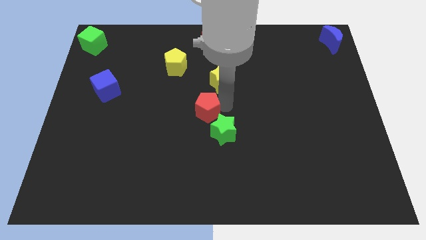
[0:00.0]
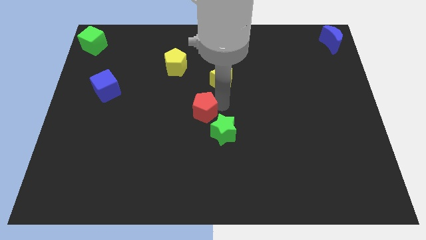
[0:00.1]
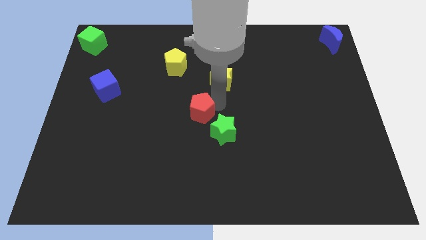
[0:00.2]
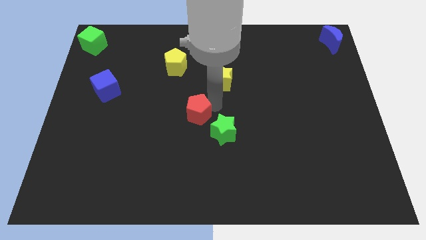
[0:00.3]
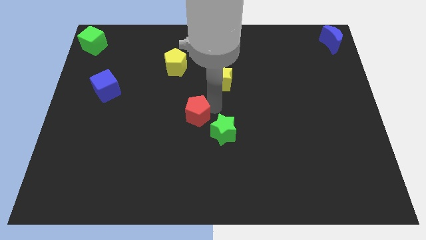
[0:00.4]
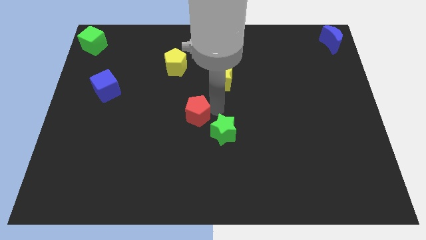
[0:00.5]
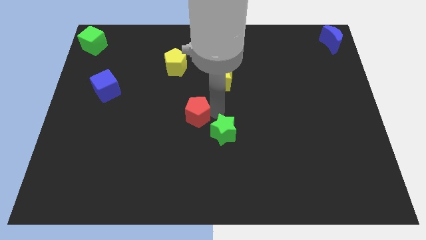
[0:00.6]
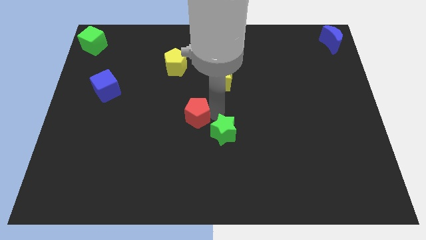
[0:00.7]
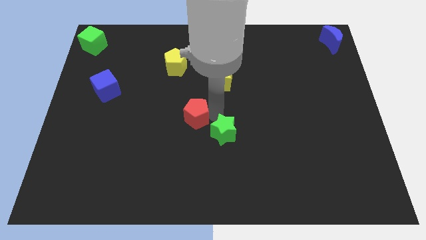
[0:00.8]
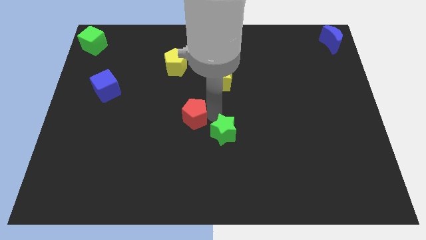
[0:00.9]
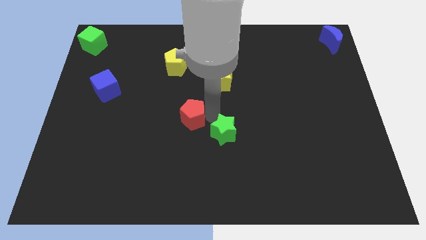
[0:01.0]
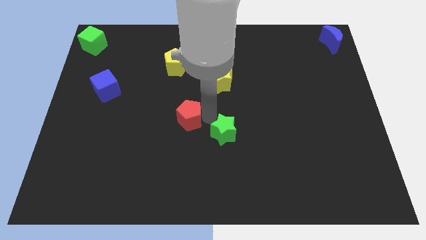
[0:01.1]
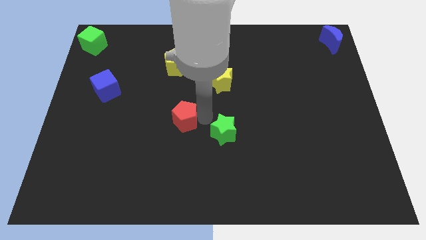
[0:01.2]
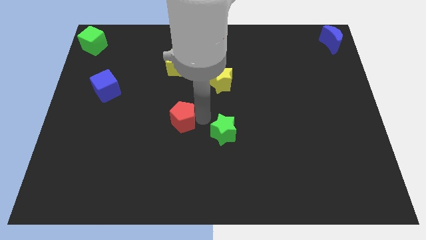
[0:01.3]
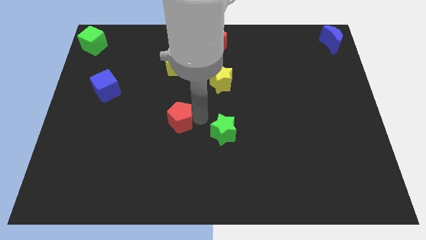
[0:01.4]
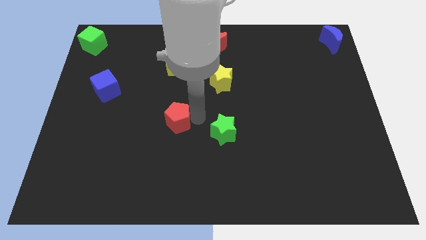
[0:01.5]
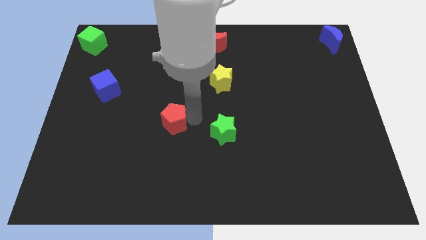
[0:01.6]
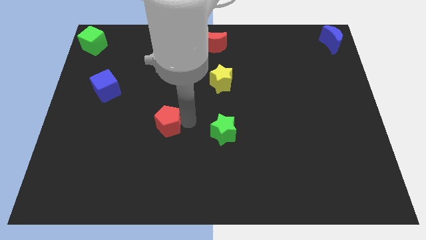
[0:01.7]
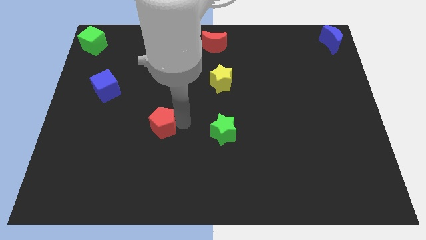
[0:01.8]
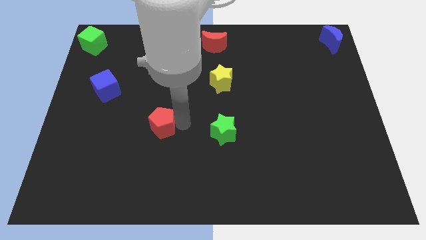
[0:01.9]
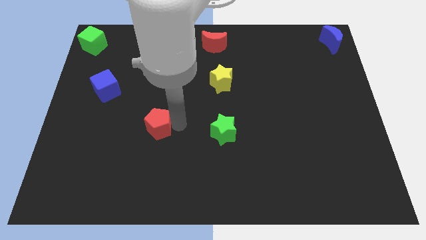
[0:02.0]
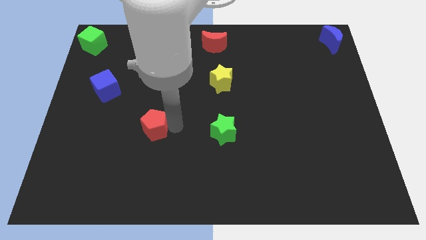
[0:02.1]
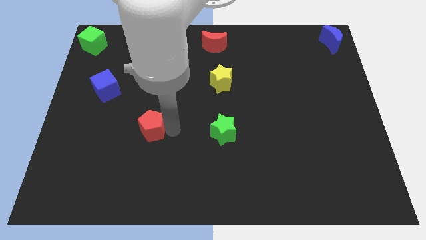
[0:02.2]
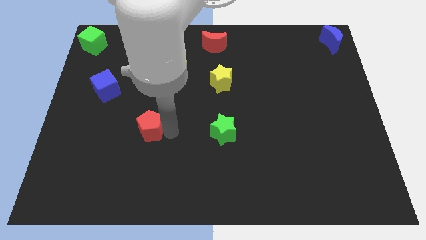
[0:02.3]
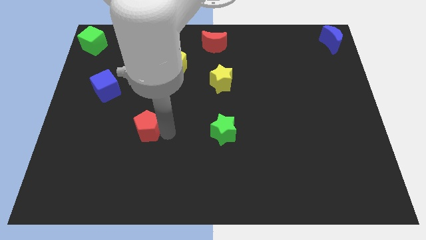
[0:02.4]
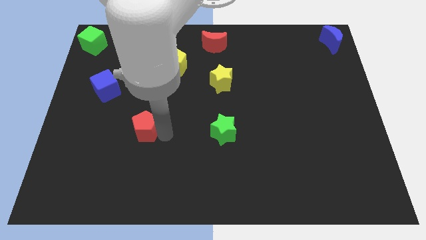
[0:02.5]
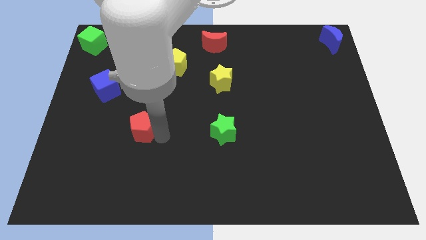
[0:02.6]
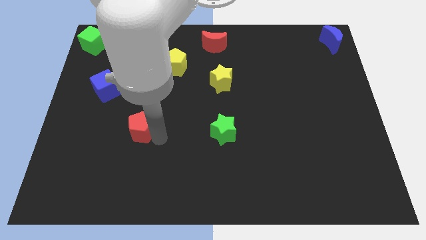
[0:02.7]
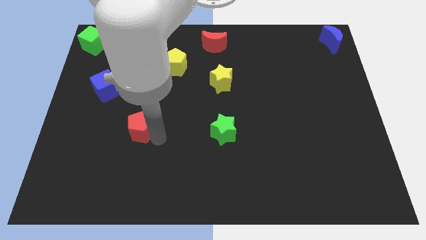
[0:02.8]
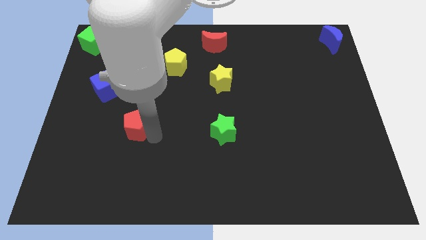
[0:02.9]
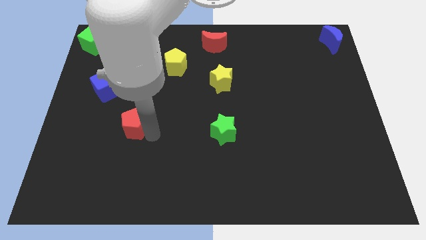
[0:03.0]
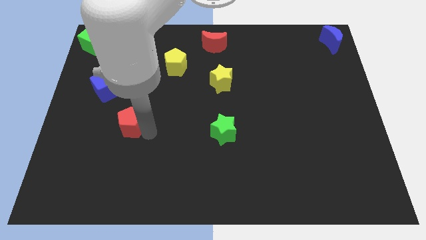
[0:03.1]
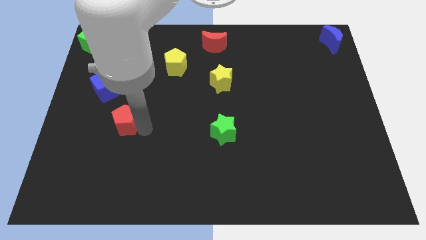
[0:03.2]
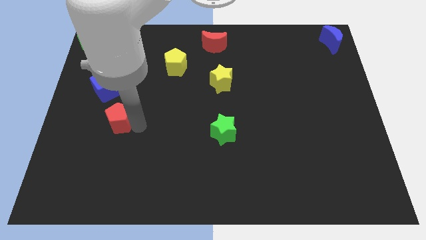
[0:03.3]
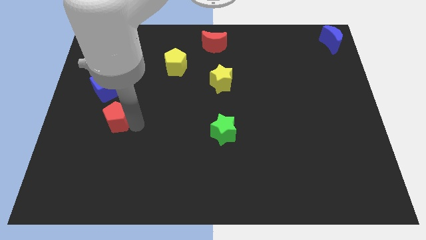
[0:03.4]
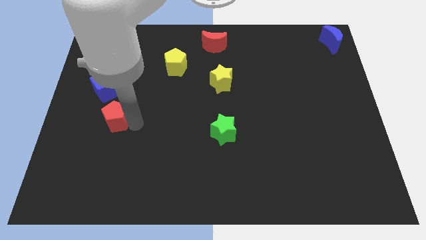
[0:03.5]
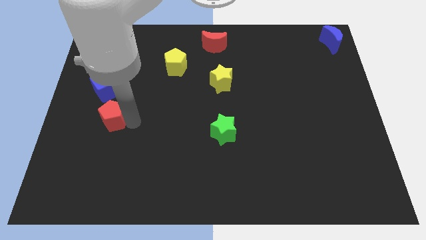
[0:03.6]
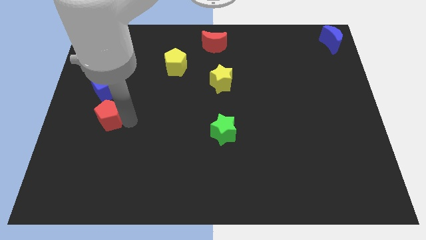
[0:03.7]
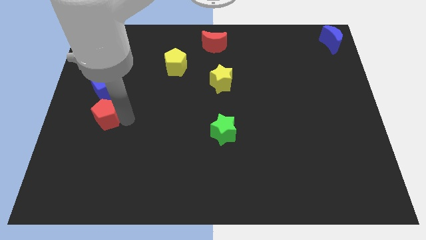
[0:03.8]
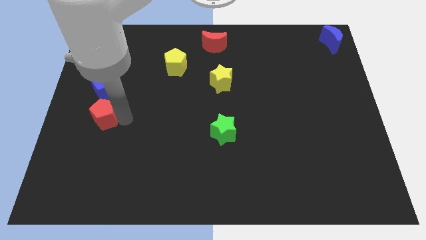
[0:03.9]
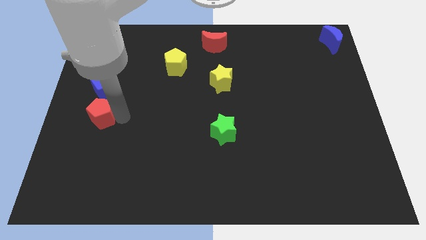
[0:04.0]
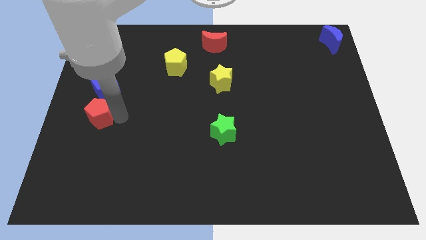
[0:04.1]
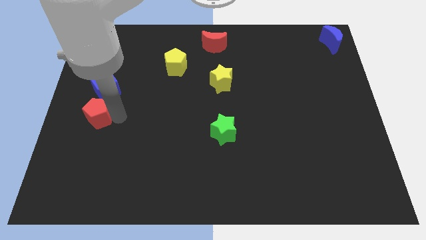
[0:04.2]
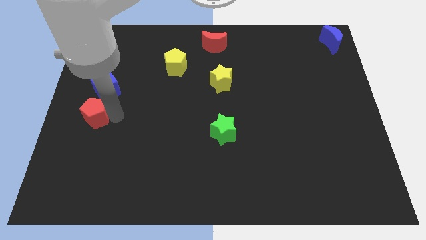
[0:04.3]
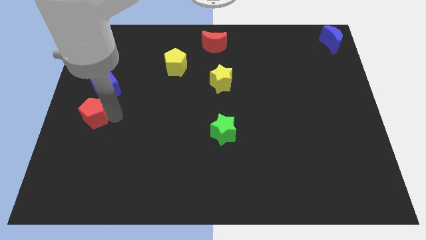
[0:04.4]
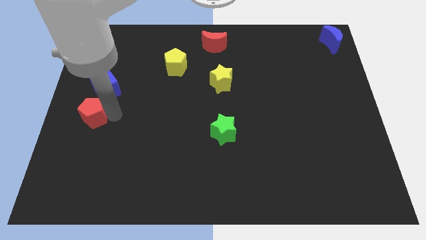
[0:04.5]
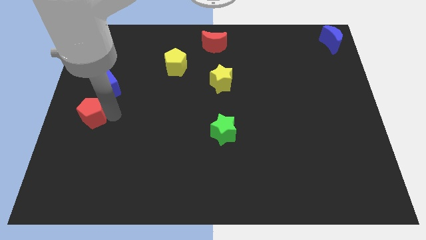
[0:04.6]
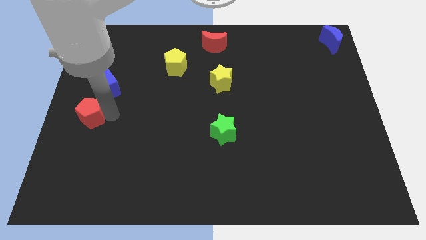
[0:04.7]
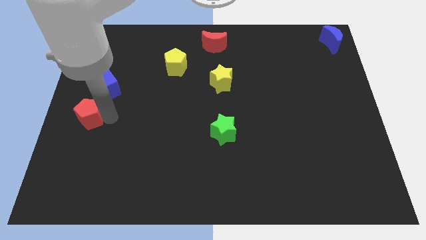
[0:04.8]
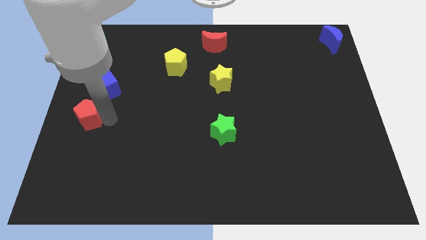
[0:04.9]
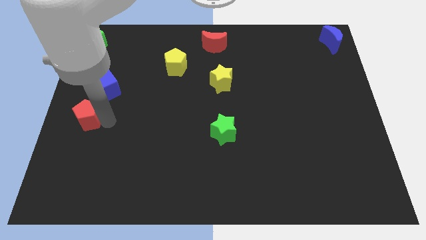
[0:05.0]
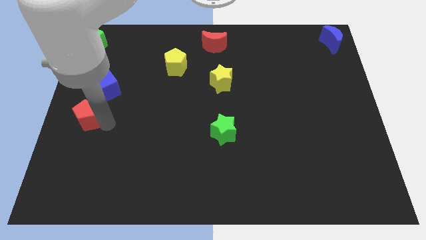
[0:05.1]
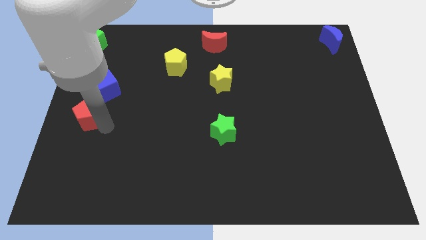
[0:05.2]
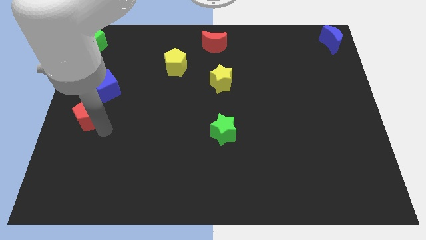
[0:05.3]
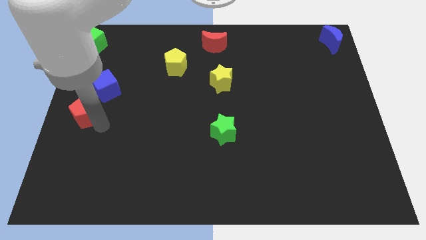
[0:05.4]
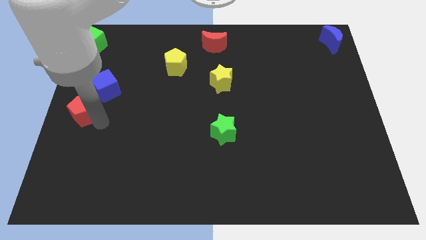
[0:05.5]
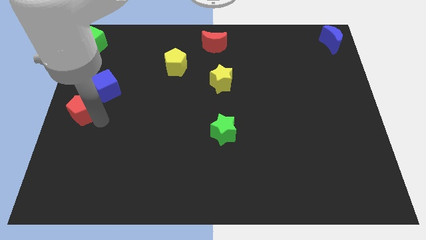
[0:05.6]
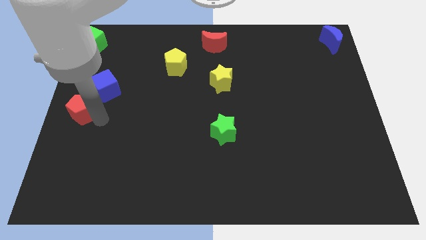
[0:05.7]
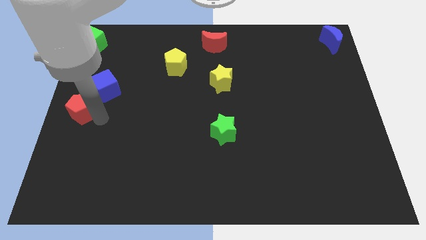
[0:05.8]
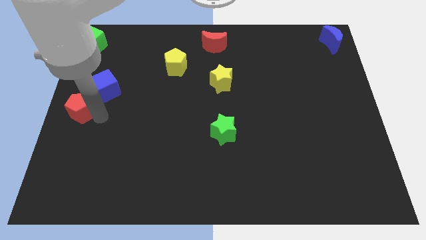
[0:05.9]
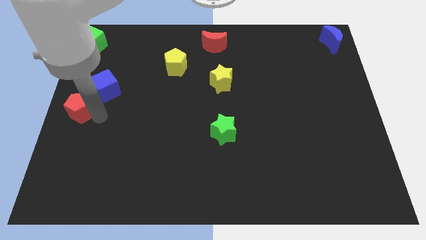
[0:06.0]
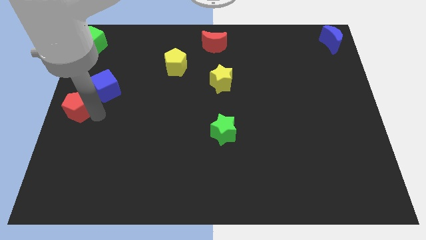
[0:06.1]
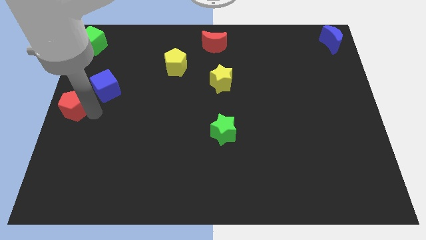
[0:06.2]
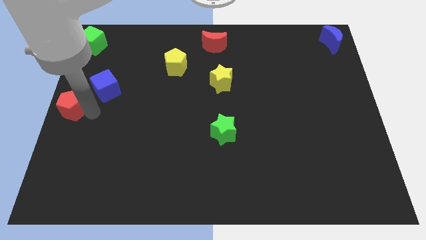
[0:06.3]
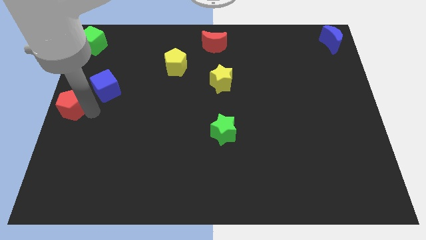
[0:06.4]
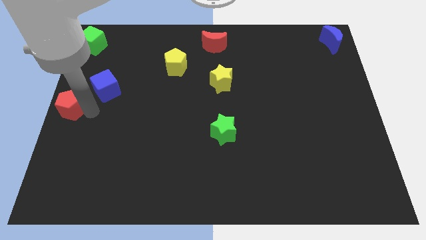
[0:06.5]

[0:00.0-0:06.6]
push the red pentagon at the center left of the table

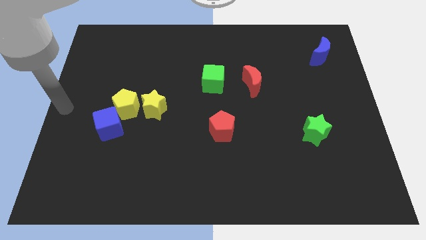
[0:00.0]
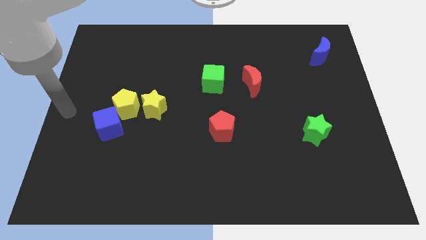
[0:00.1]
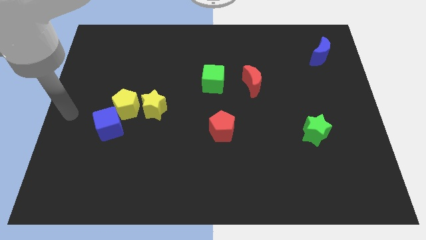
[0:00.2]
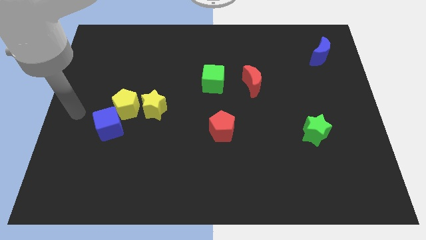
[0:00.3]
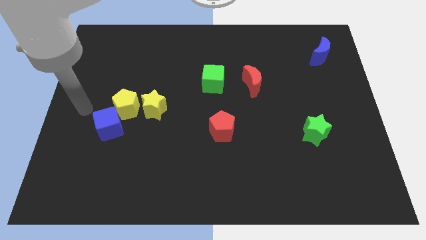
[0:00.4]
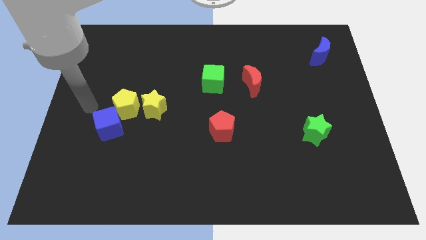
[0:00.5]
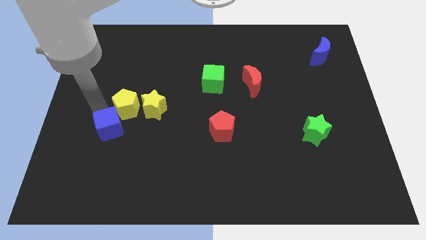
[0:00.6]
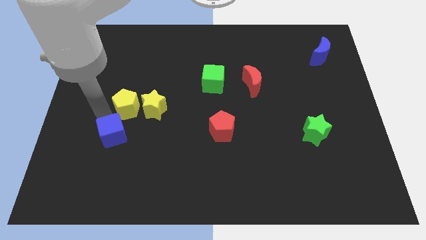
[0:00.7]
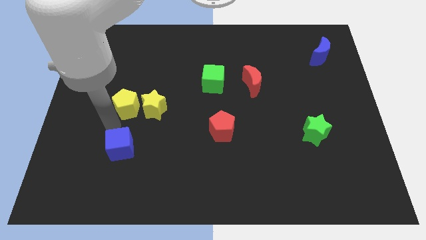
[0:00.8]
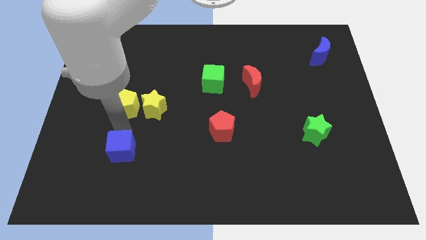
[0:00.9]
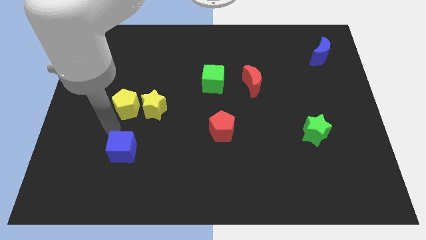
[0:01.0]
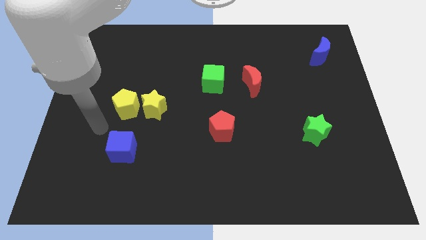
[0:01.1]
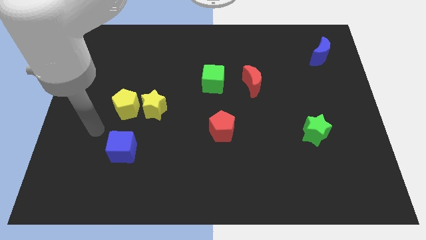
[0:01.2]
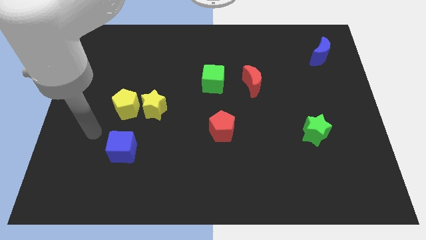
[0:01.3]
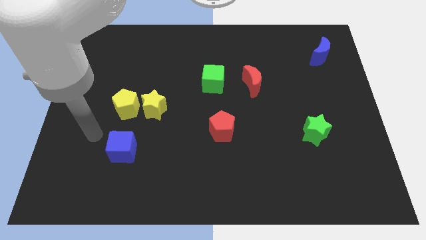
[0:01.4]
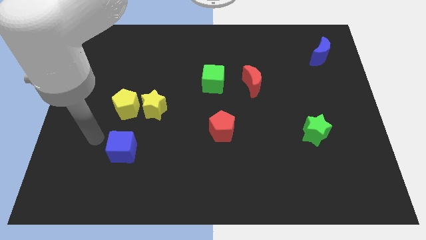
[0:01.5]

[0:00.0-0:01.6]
move the blue cube away from the yellow pentagon

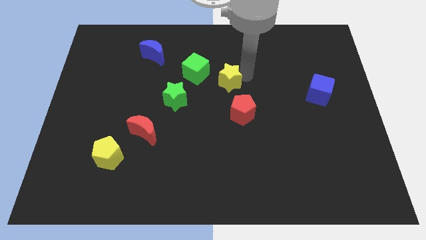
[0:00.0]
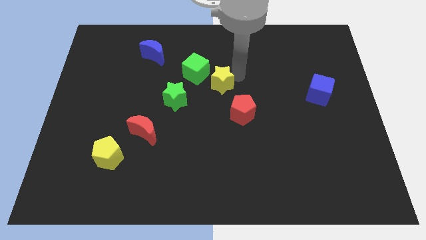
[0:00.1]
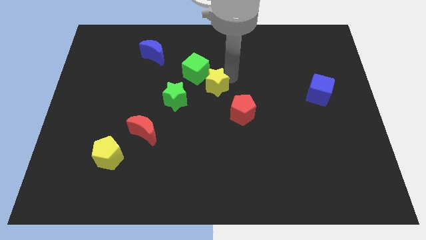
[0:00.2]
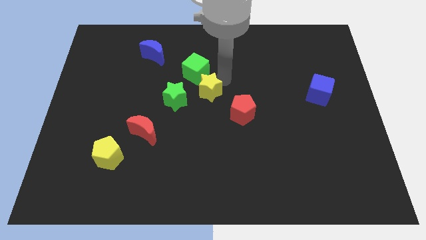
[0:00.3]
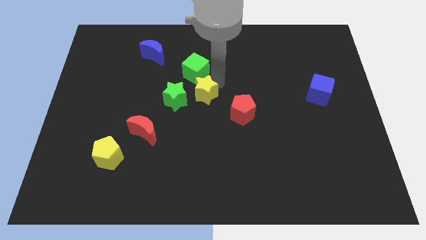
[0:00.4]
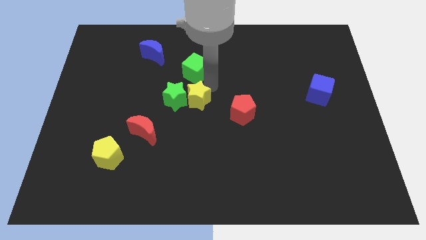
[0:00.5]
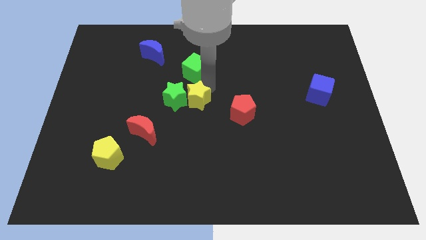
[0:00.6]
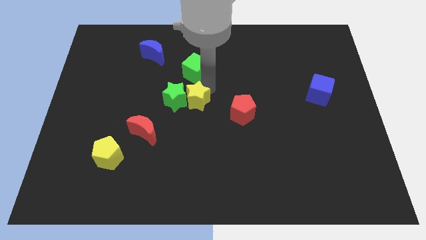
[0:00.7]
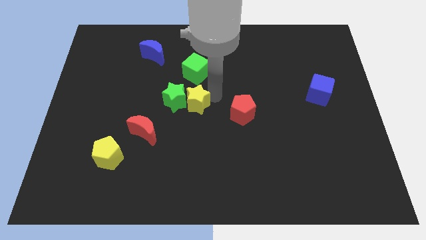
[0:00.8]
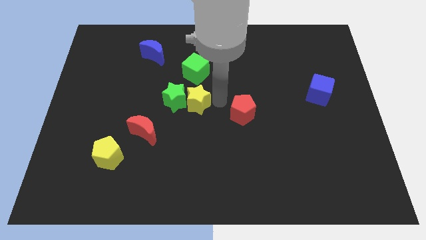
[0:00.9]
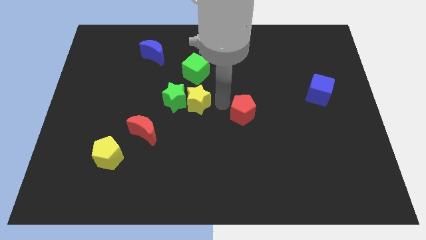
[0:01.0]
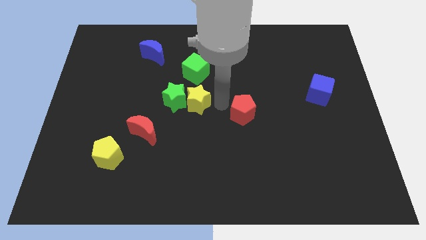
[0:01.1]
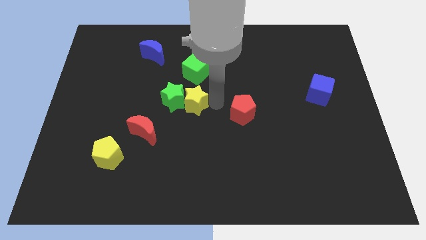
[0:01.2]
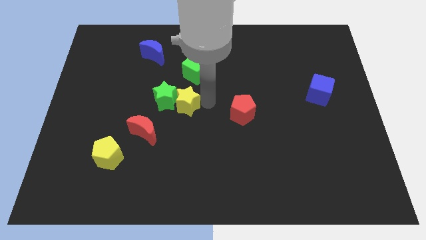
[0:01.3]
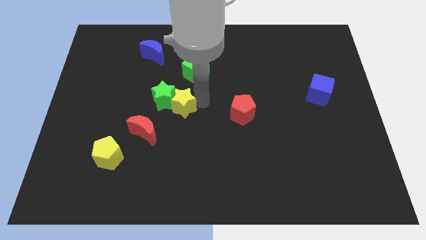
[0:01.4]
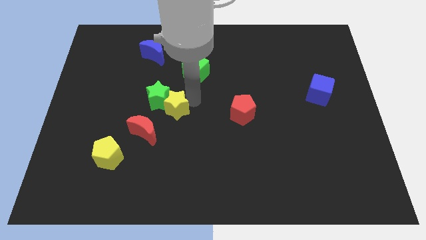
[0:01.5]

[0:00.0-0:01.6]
push the yellow star into green star
